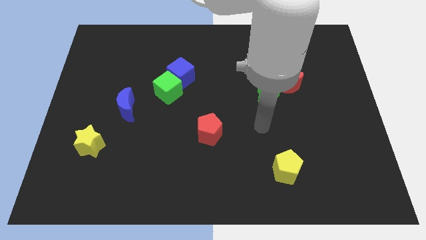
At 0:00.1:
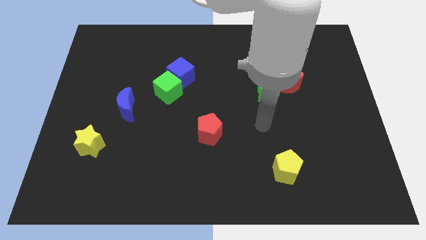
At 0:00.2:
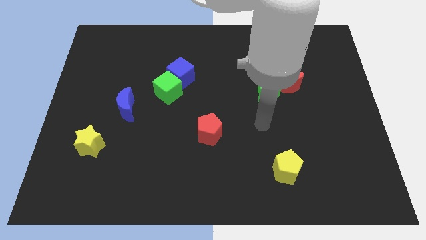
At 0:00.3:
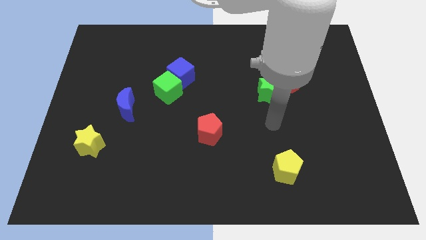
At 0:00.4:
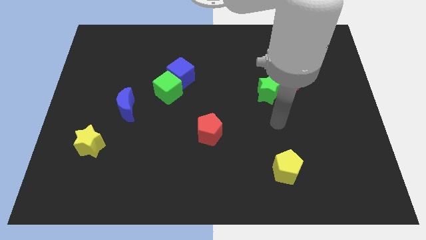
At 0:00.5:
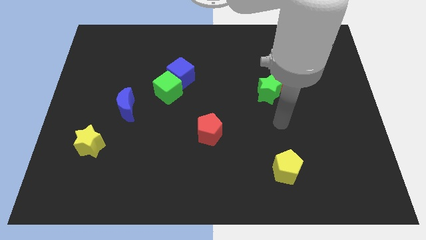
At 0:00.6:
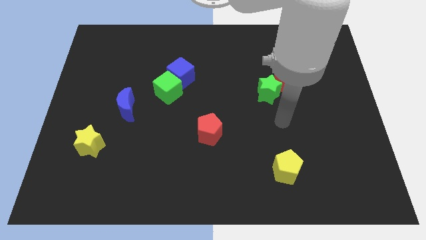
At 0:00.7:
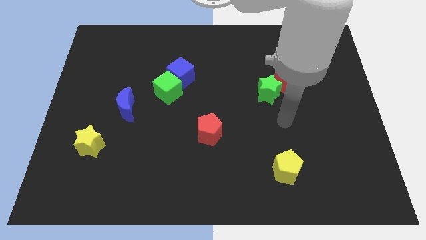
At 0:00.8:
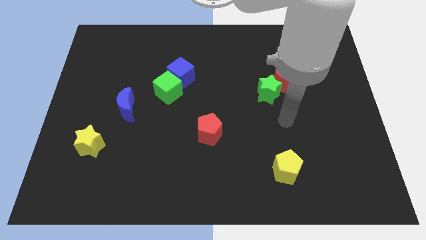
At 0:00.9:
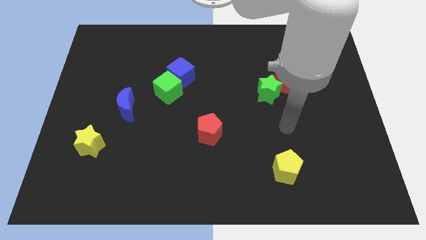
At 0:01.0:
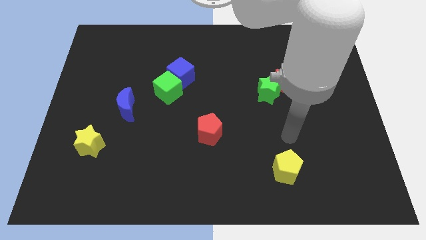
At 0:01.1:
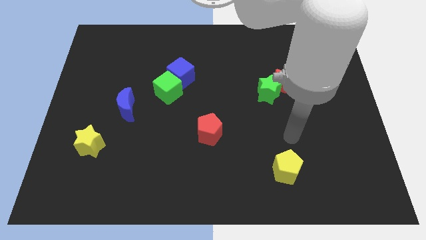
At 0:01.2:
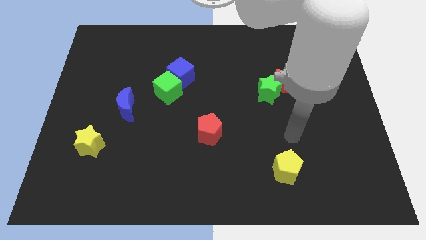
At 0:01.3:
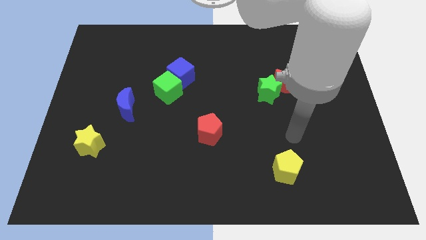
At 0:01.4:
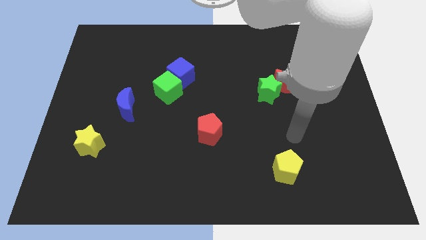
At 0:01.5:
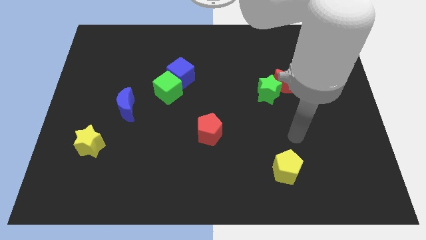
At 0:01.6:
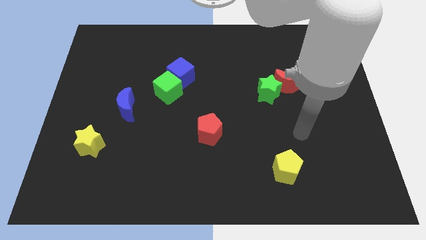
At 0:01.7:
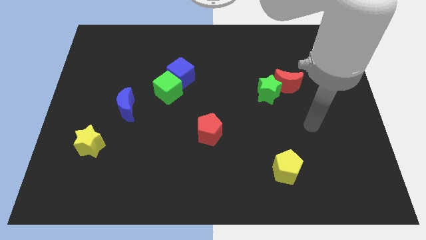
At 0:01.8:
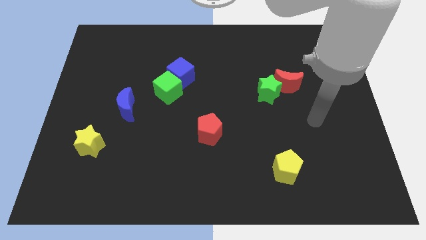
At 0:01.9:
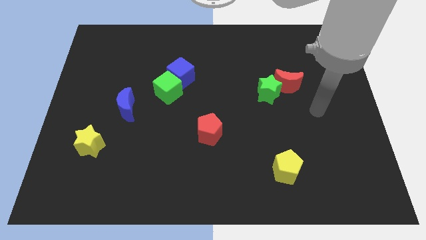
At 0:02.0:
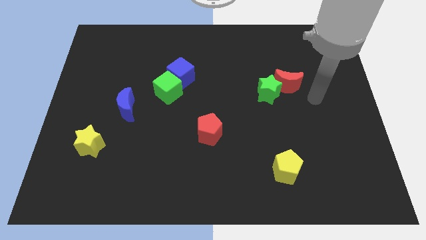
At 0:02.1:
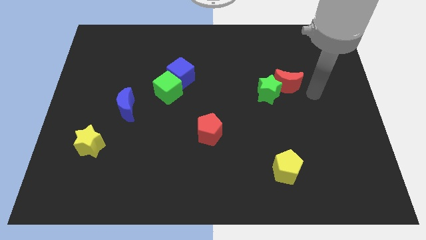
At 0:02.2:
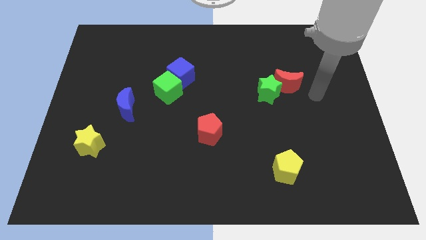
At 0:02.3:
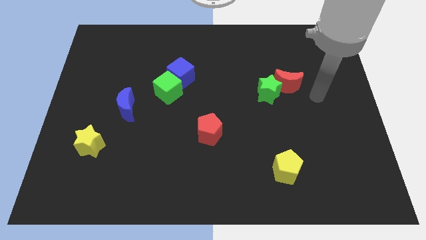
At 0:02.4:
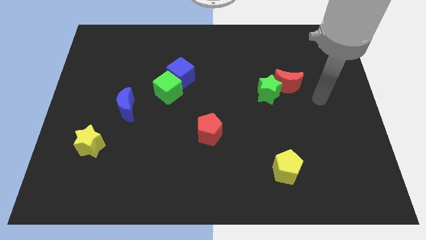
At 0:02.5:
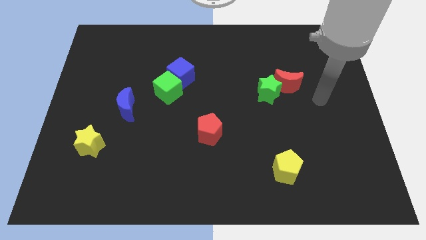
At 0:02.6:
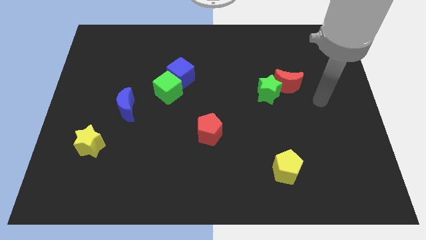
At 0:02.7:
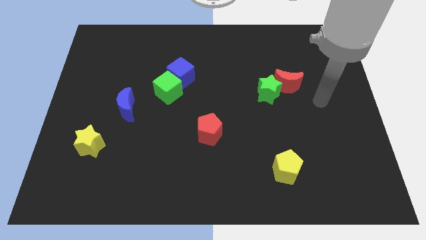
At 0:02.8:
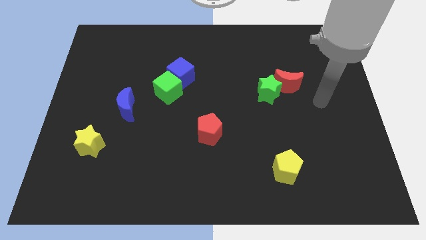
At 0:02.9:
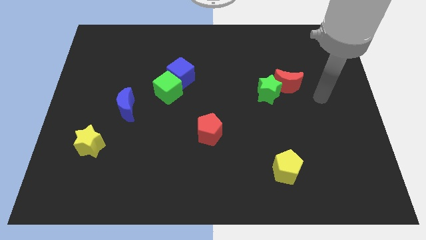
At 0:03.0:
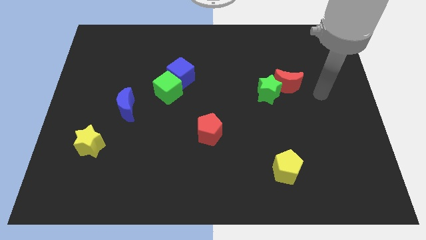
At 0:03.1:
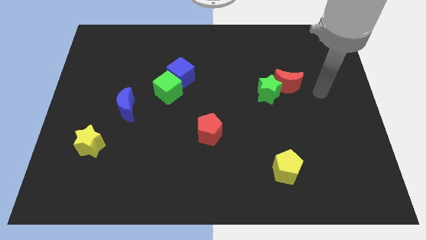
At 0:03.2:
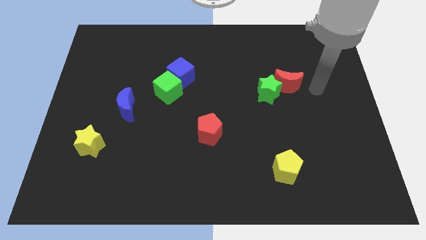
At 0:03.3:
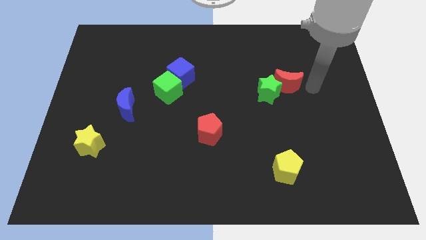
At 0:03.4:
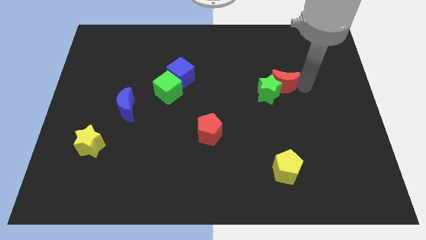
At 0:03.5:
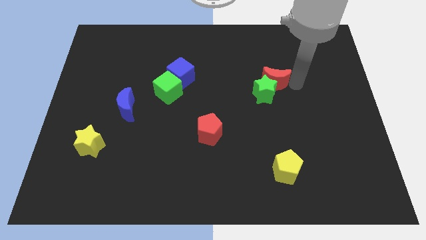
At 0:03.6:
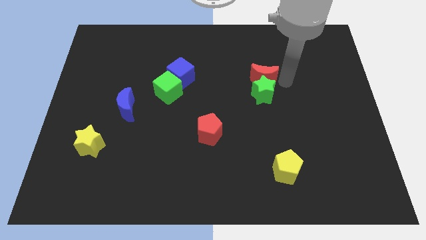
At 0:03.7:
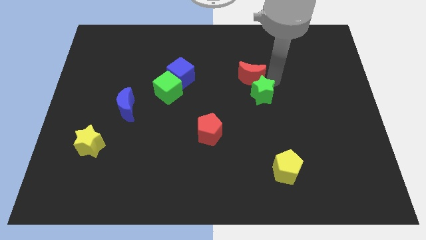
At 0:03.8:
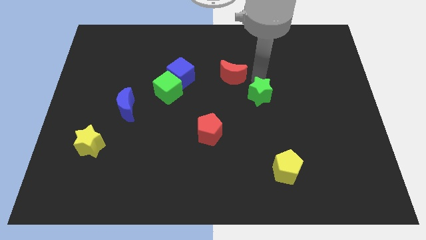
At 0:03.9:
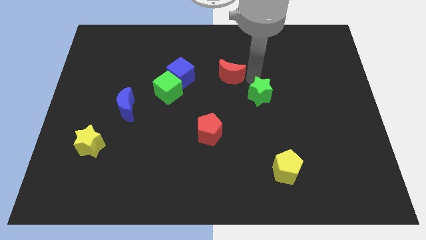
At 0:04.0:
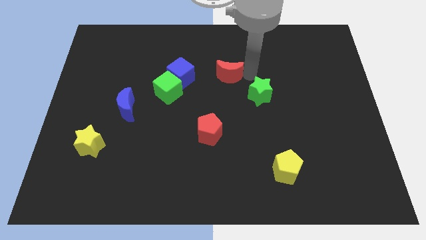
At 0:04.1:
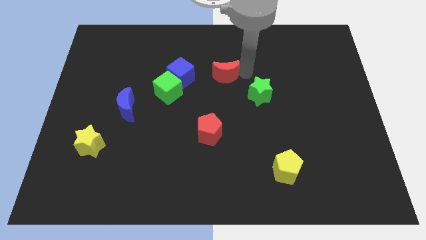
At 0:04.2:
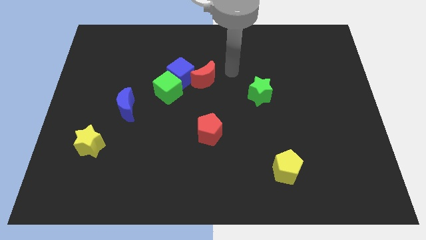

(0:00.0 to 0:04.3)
separate the red crrescent from the top side of the green star

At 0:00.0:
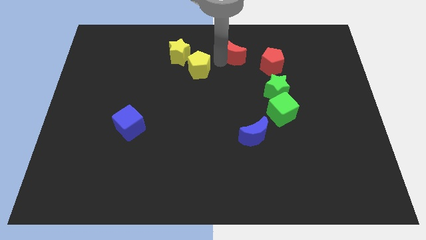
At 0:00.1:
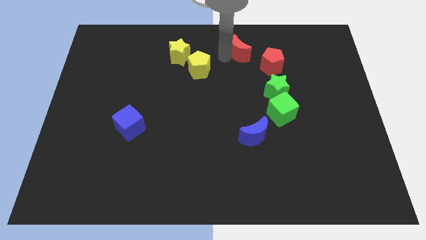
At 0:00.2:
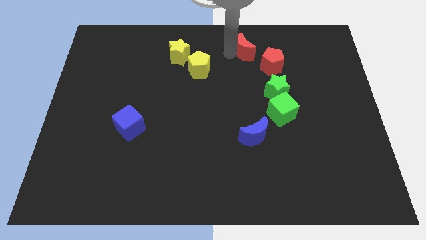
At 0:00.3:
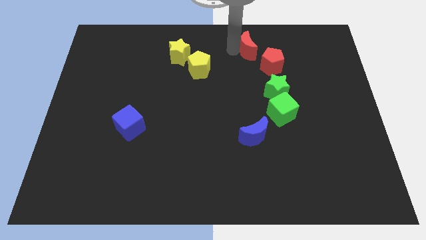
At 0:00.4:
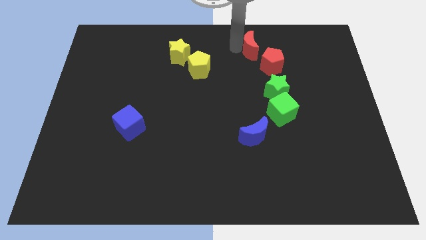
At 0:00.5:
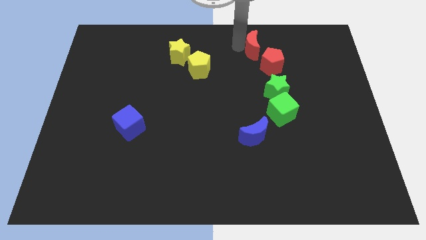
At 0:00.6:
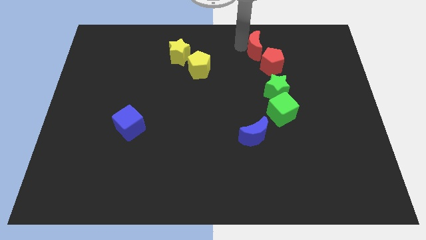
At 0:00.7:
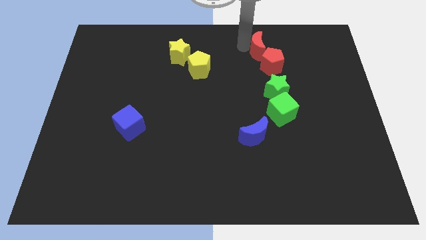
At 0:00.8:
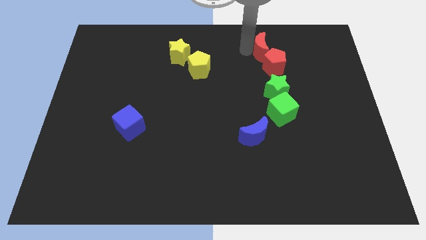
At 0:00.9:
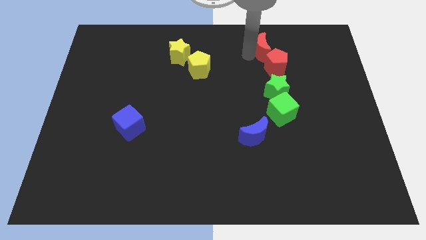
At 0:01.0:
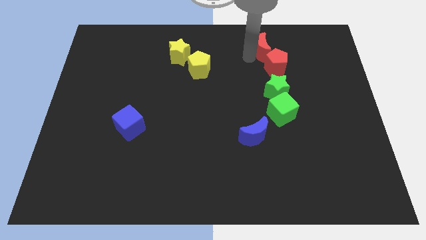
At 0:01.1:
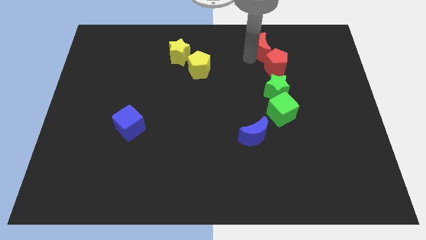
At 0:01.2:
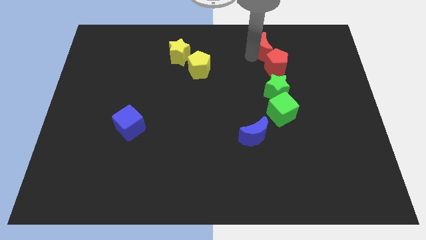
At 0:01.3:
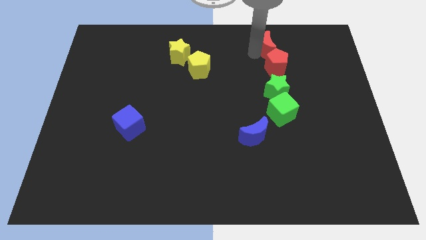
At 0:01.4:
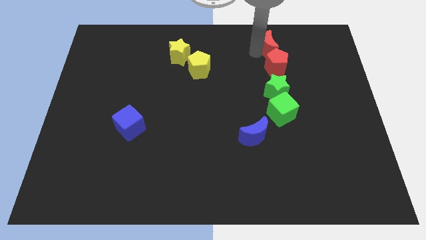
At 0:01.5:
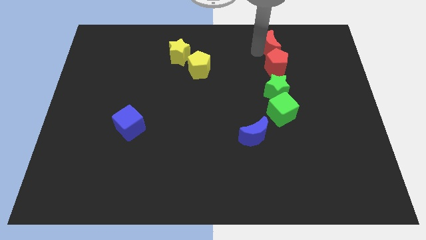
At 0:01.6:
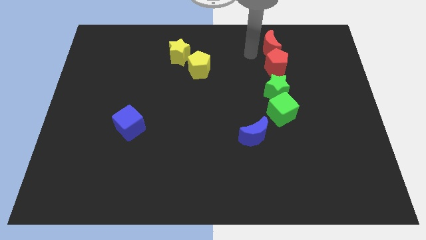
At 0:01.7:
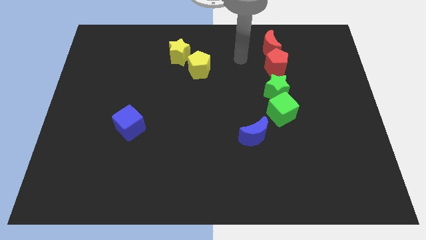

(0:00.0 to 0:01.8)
push the red moon to the top side of the red pentagon

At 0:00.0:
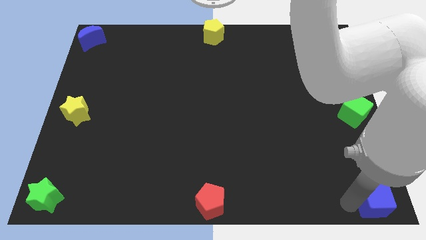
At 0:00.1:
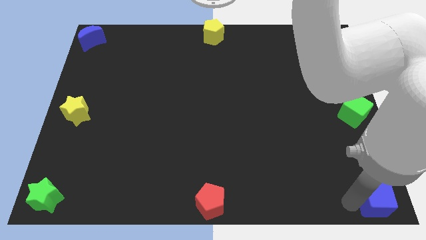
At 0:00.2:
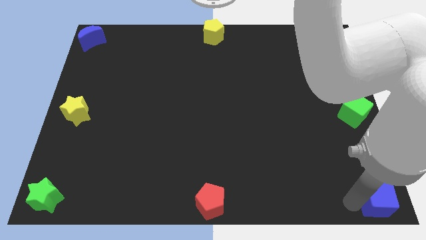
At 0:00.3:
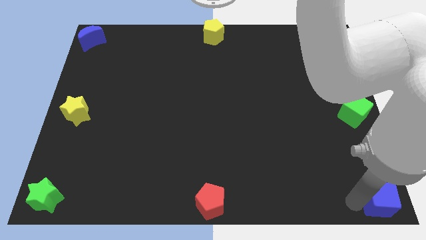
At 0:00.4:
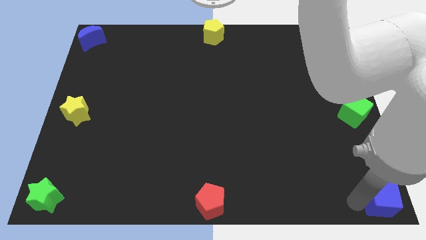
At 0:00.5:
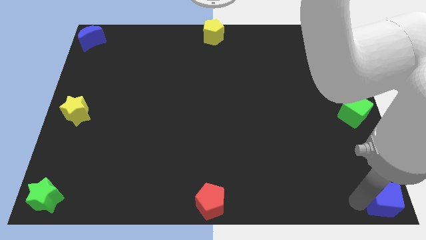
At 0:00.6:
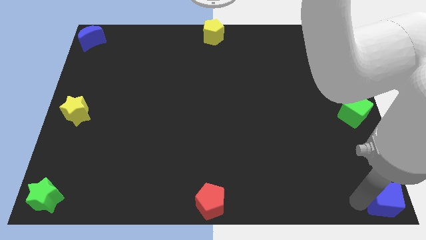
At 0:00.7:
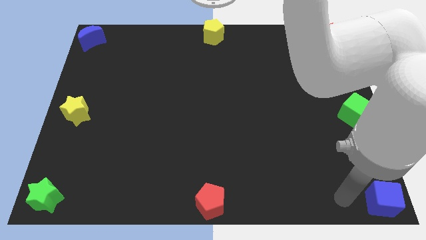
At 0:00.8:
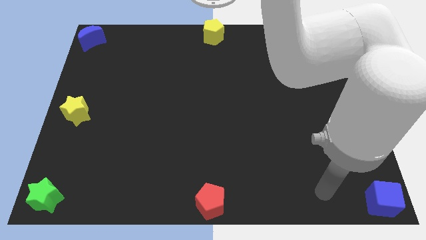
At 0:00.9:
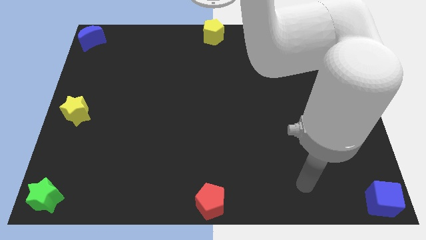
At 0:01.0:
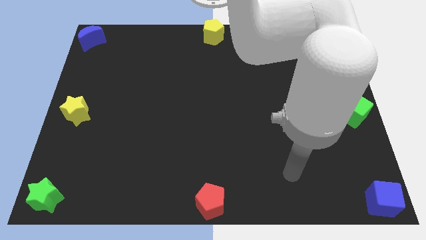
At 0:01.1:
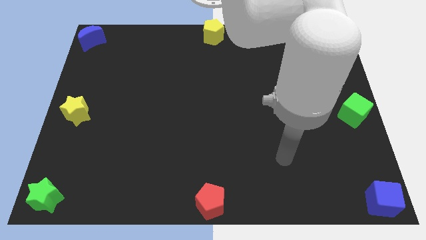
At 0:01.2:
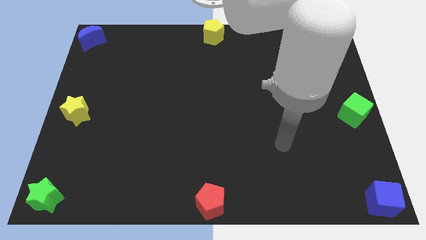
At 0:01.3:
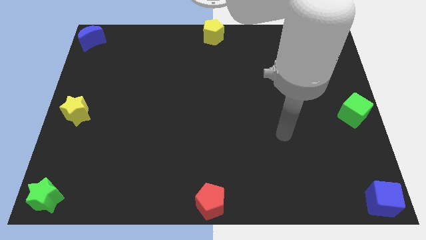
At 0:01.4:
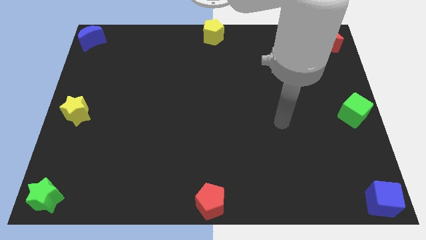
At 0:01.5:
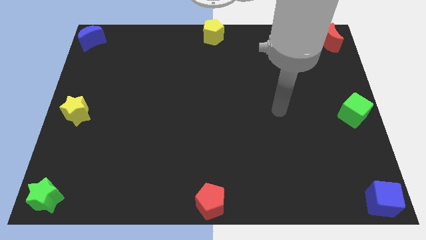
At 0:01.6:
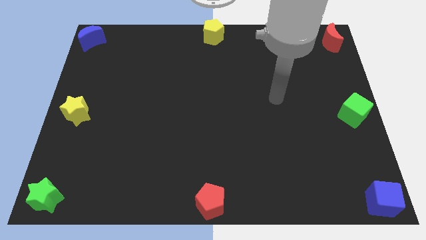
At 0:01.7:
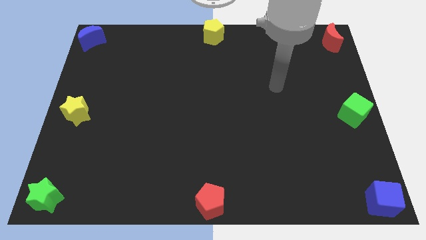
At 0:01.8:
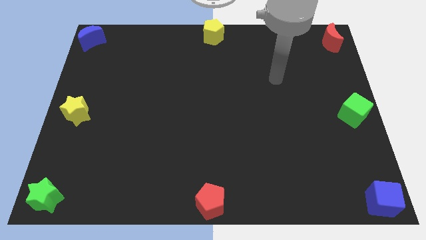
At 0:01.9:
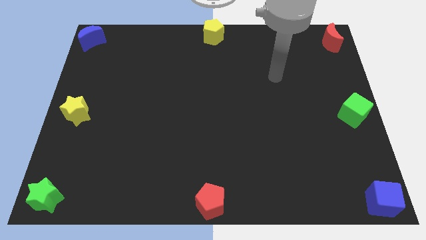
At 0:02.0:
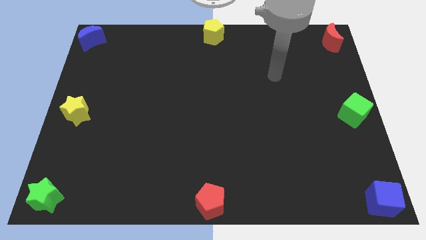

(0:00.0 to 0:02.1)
move the blue cube to the bottom right corner of the board

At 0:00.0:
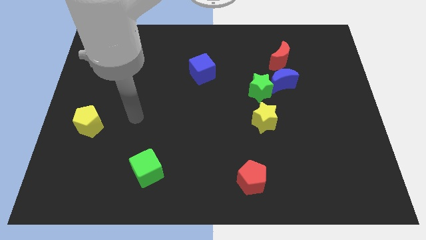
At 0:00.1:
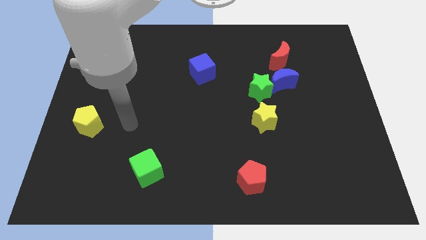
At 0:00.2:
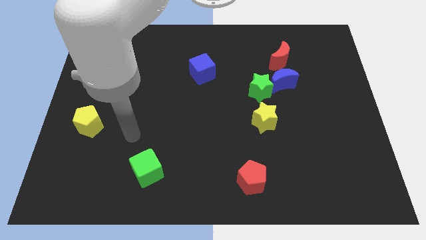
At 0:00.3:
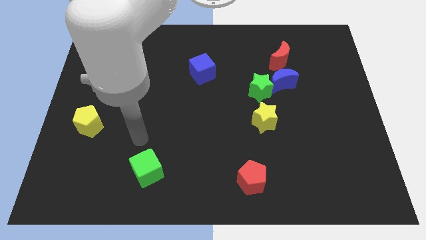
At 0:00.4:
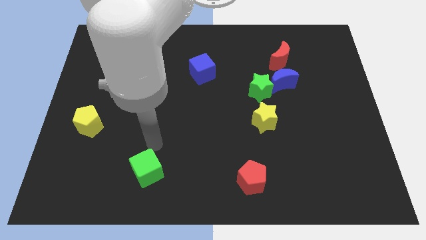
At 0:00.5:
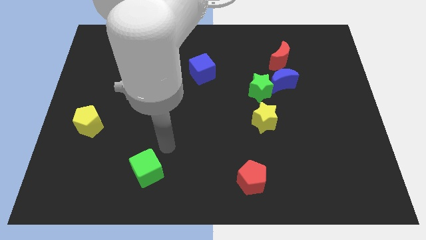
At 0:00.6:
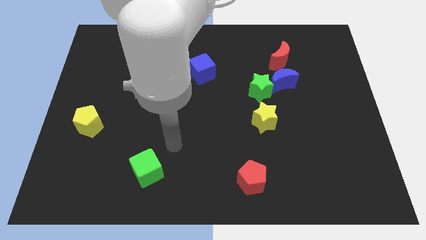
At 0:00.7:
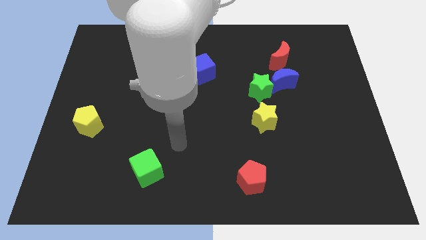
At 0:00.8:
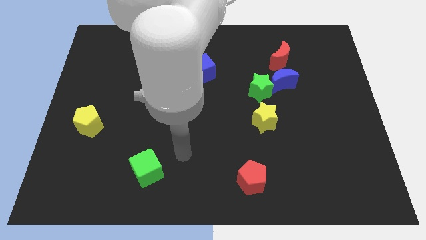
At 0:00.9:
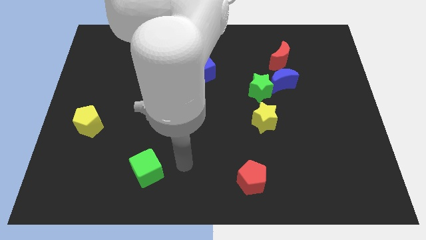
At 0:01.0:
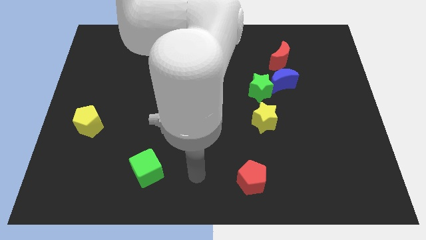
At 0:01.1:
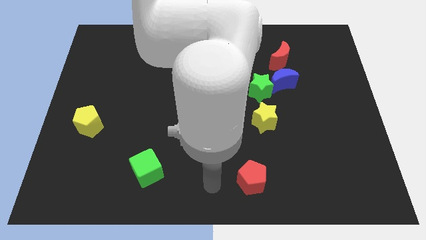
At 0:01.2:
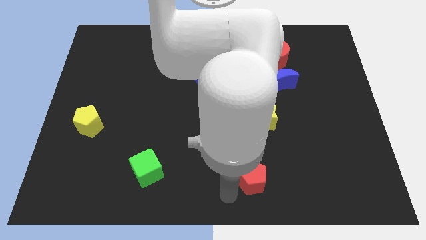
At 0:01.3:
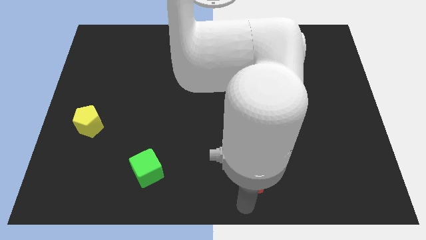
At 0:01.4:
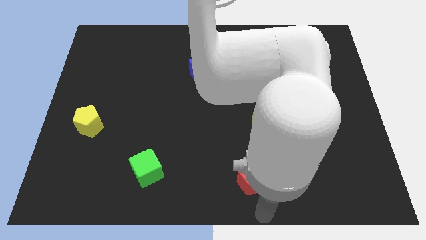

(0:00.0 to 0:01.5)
move your arm to the bottom center
